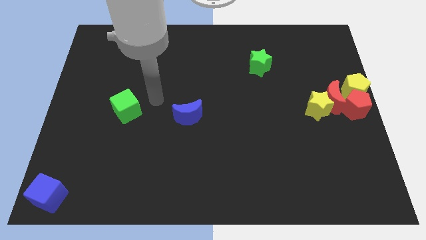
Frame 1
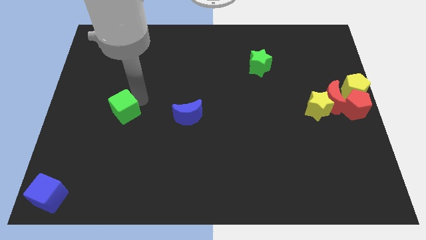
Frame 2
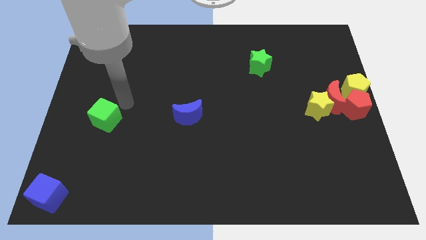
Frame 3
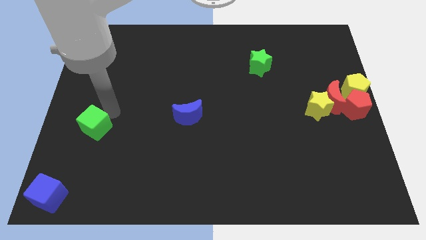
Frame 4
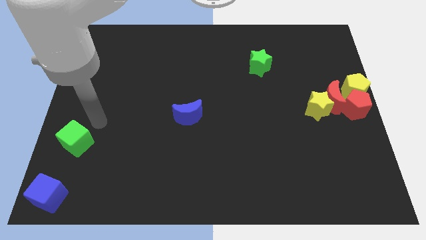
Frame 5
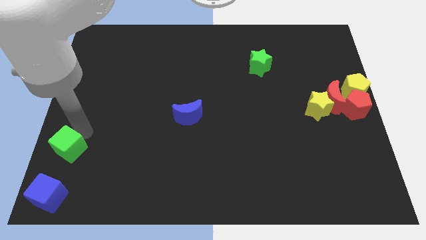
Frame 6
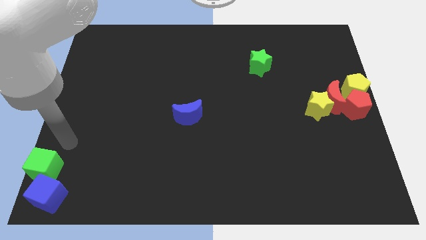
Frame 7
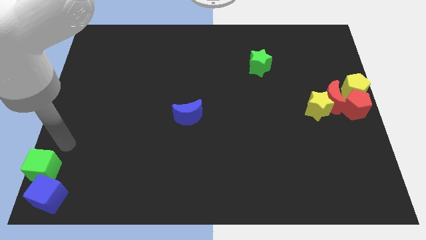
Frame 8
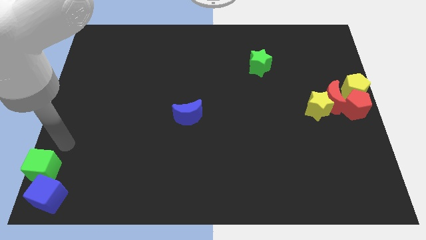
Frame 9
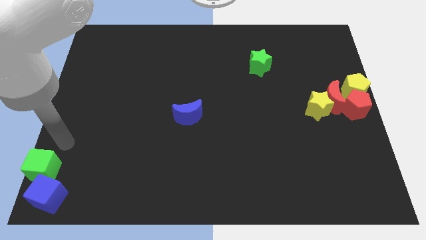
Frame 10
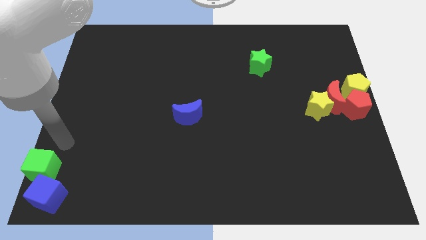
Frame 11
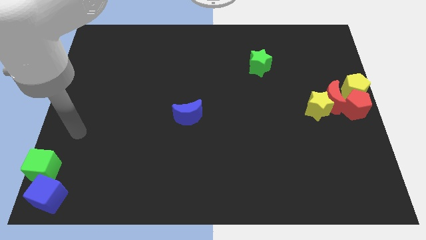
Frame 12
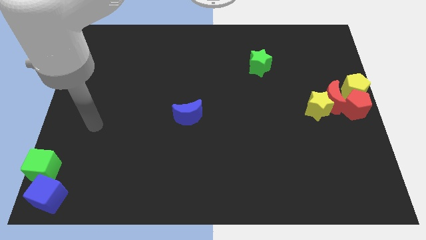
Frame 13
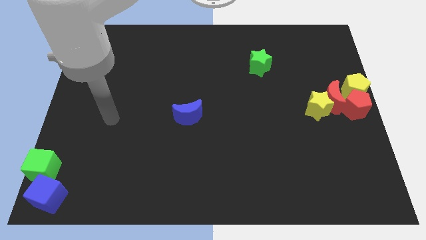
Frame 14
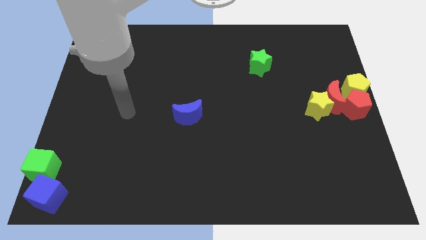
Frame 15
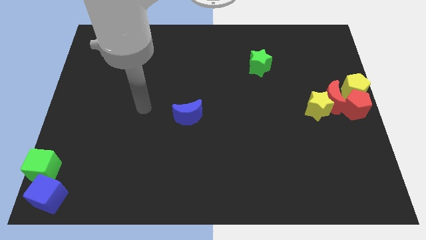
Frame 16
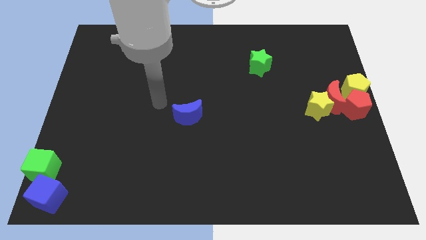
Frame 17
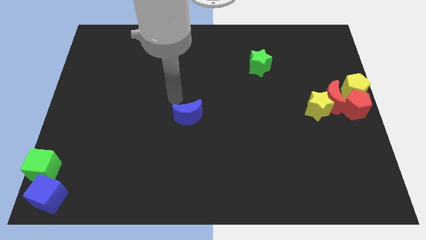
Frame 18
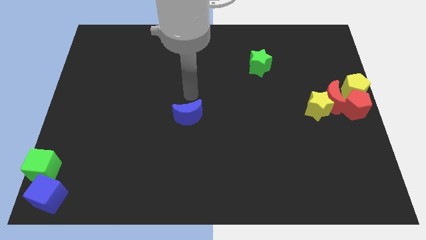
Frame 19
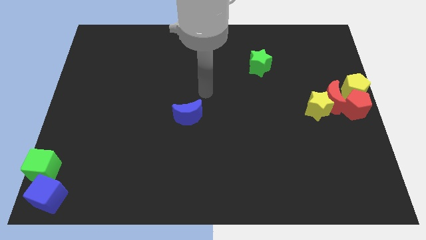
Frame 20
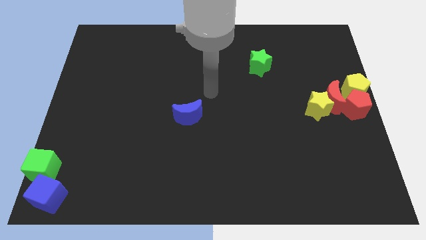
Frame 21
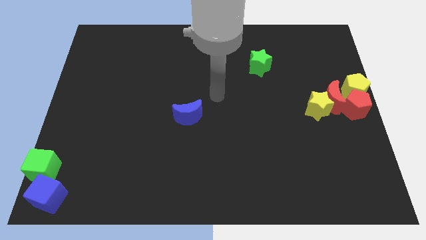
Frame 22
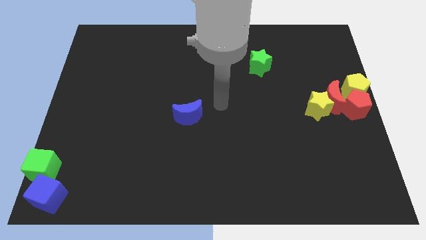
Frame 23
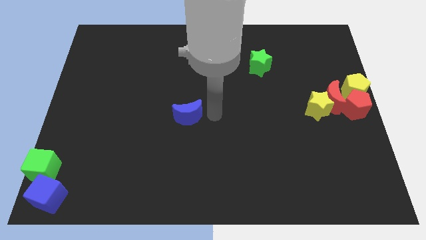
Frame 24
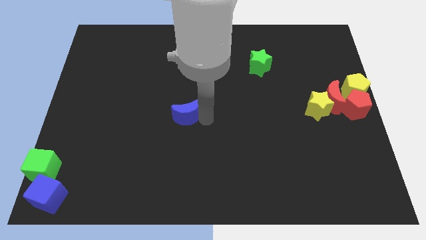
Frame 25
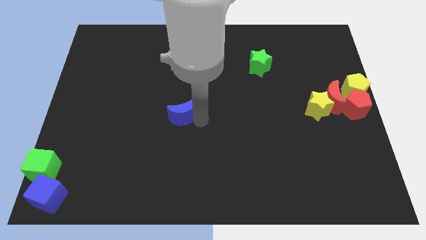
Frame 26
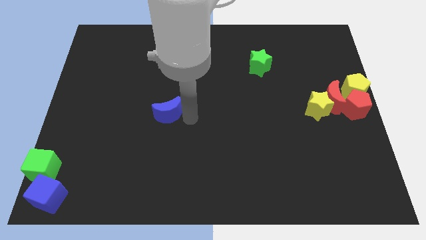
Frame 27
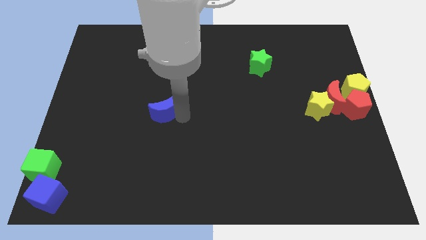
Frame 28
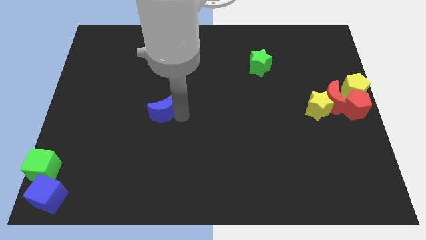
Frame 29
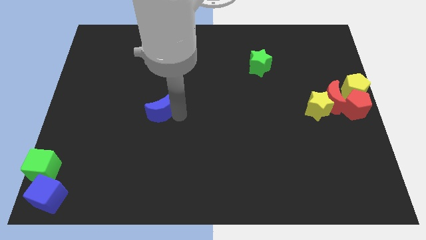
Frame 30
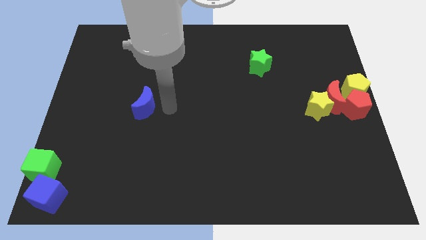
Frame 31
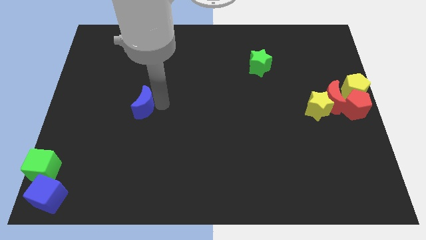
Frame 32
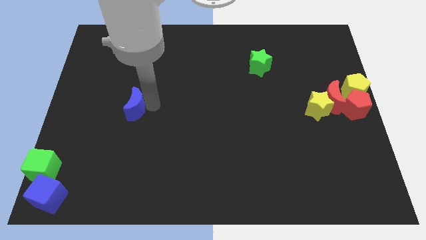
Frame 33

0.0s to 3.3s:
move the green cube into the blue cube

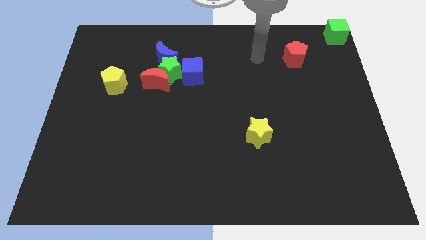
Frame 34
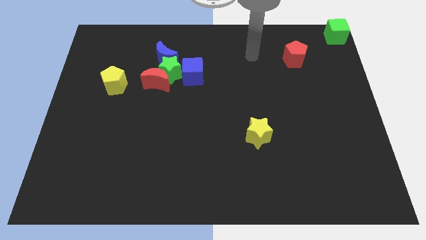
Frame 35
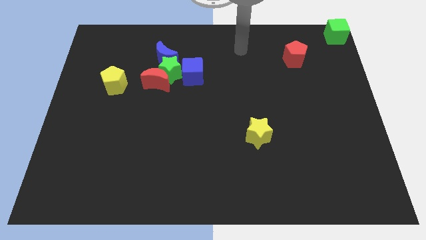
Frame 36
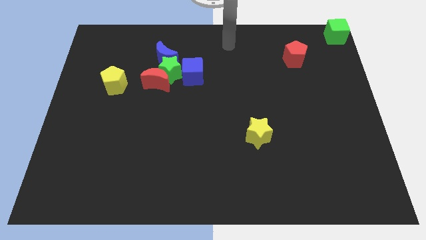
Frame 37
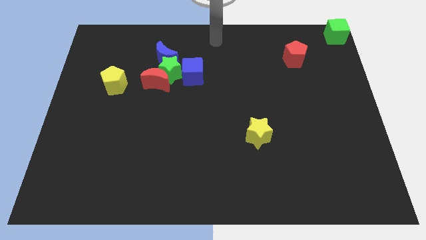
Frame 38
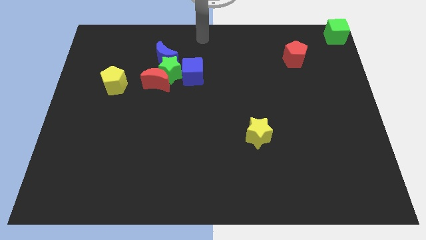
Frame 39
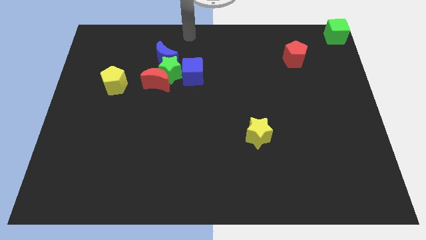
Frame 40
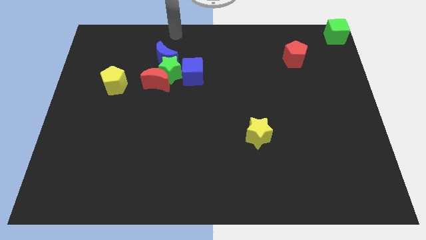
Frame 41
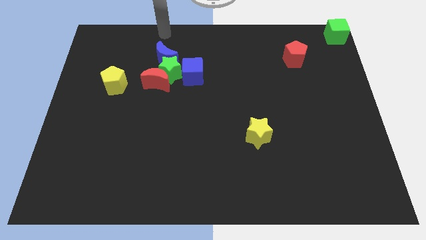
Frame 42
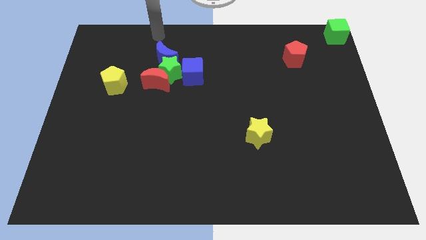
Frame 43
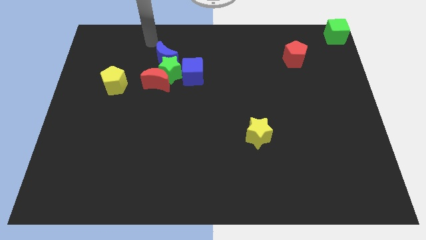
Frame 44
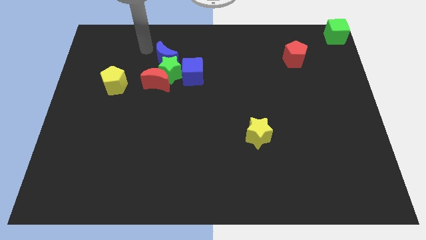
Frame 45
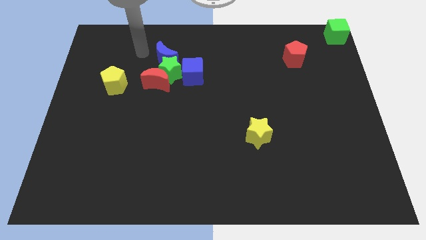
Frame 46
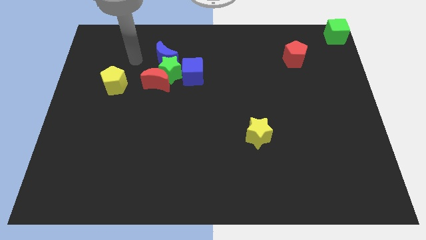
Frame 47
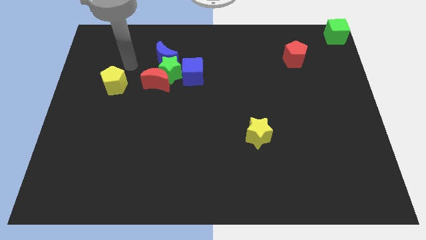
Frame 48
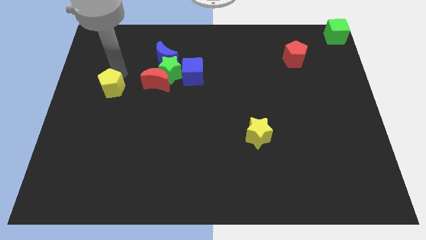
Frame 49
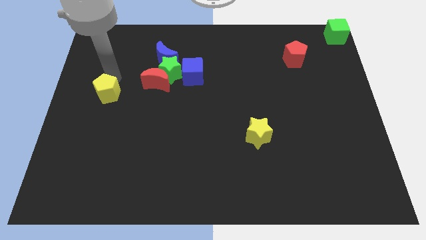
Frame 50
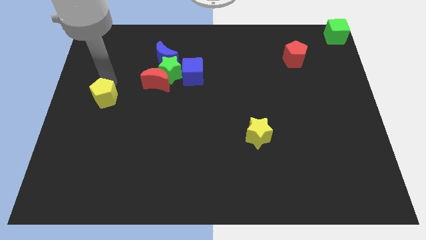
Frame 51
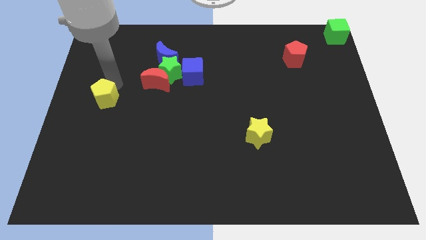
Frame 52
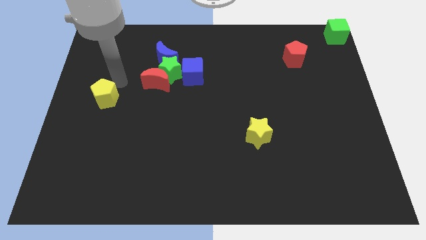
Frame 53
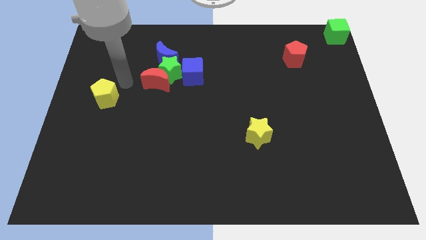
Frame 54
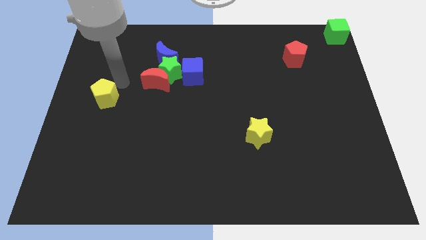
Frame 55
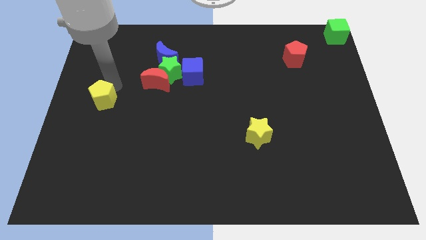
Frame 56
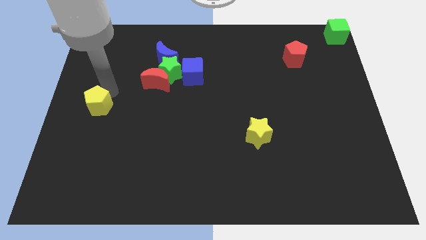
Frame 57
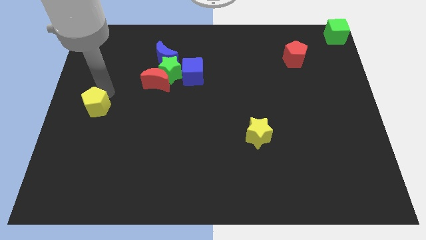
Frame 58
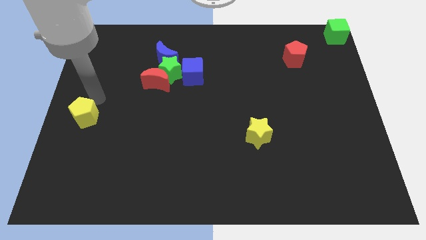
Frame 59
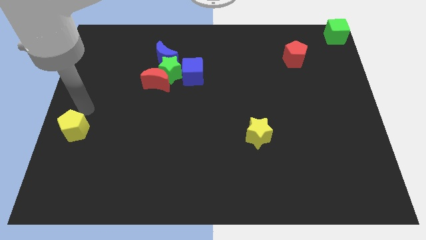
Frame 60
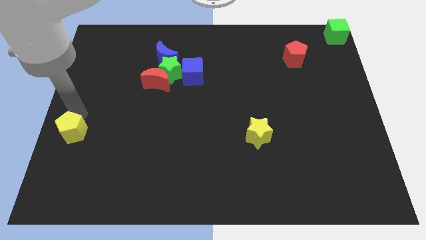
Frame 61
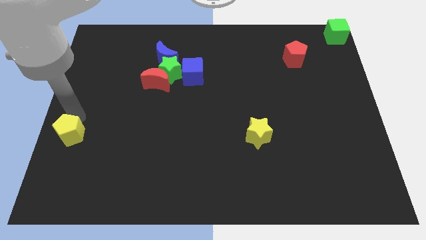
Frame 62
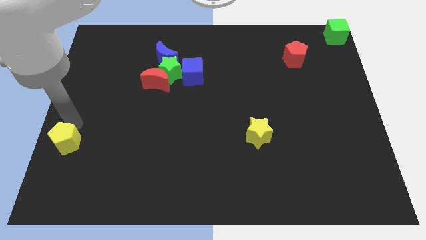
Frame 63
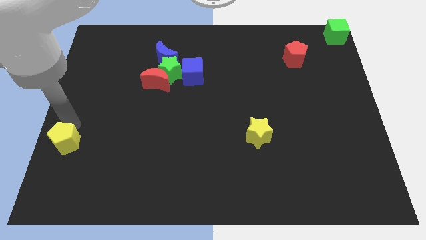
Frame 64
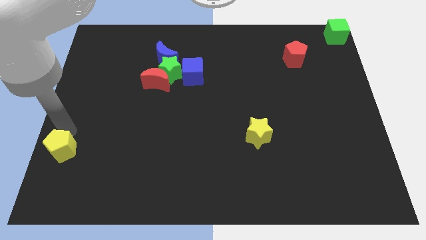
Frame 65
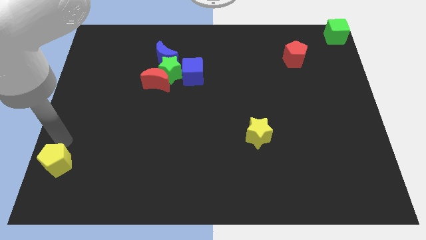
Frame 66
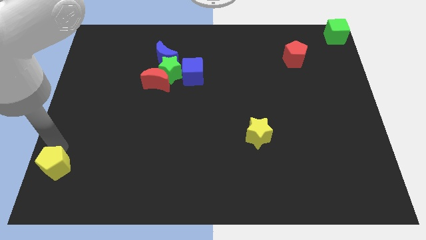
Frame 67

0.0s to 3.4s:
push the yellow pentagon towards the bottom left side of the board

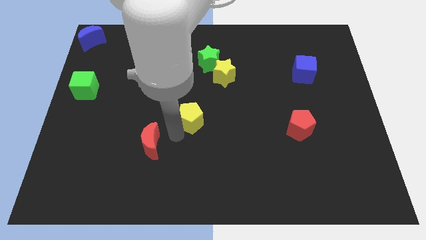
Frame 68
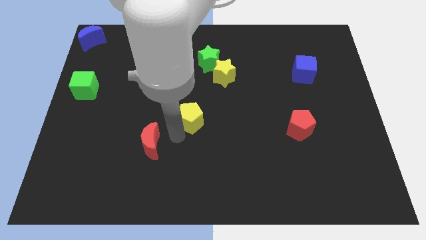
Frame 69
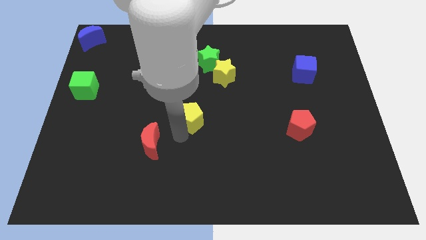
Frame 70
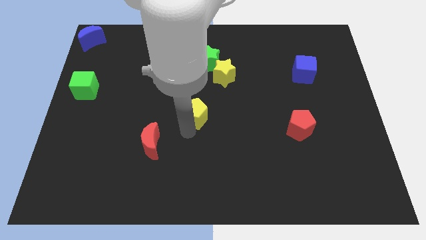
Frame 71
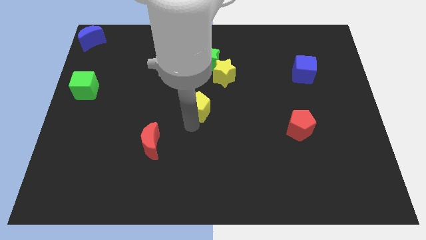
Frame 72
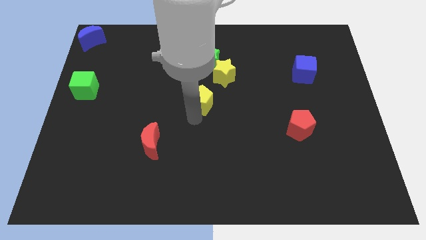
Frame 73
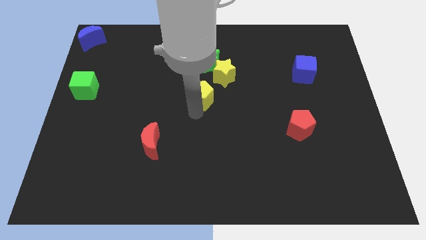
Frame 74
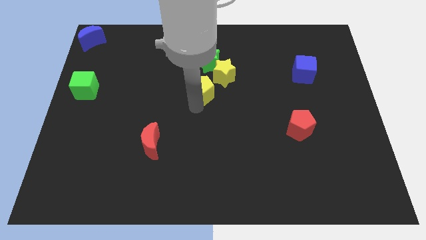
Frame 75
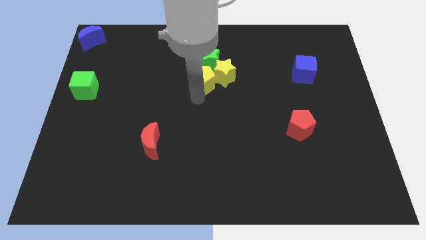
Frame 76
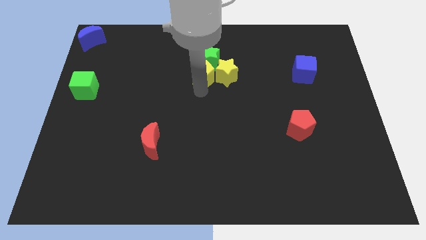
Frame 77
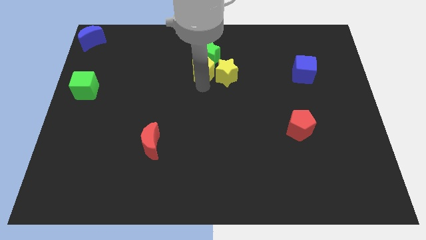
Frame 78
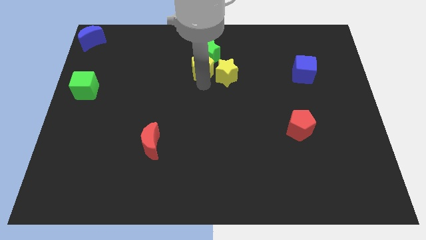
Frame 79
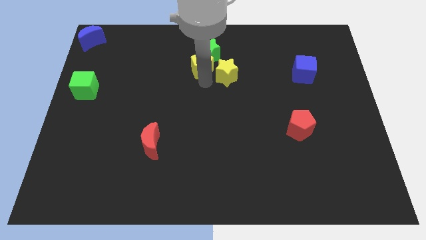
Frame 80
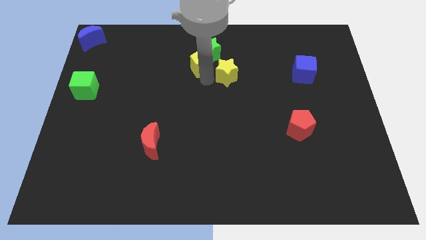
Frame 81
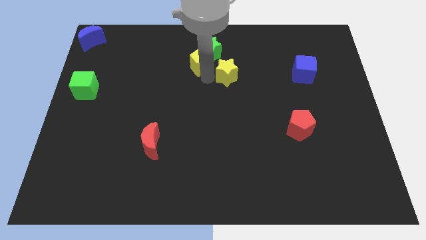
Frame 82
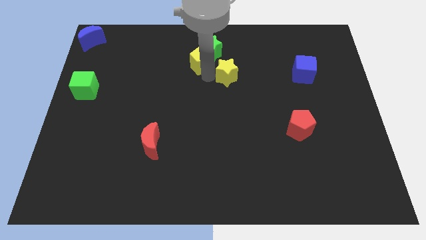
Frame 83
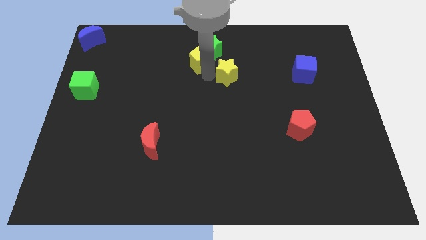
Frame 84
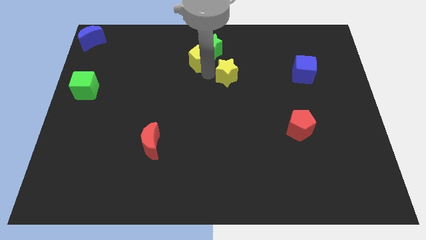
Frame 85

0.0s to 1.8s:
push the yellow pentagon into the green star

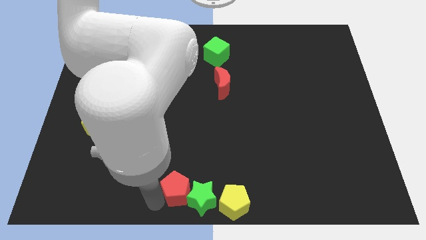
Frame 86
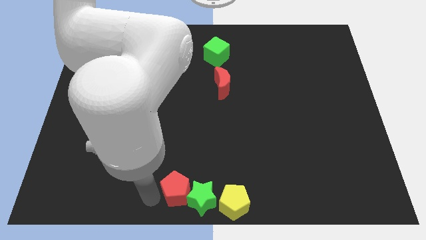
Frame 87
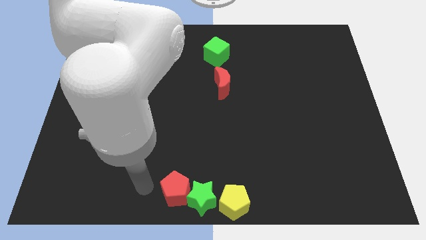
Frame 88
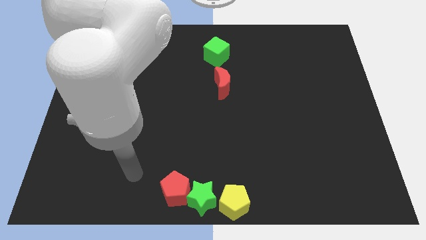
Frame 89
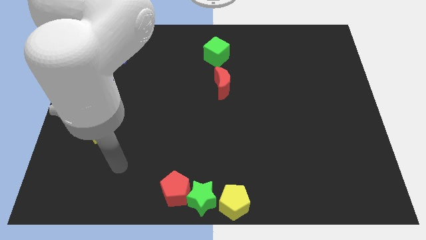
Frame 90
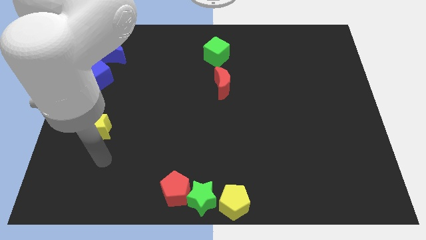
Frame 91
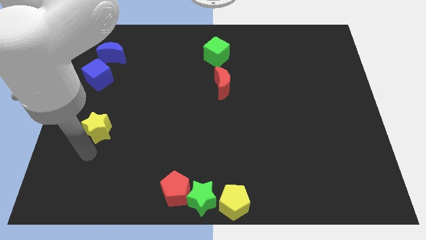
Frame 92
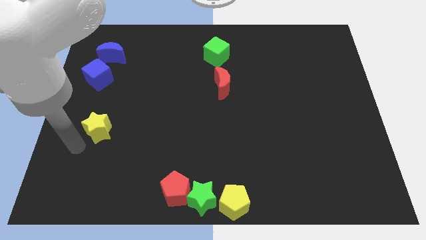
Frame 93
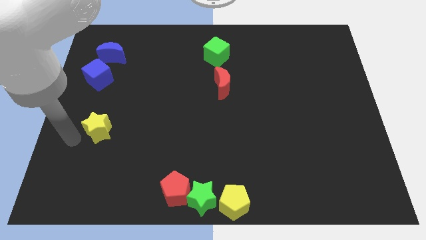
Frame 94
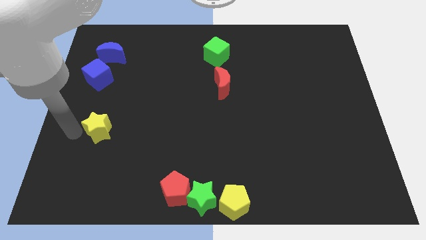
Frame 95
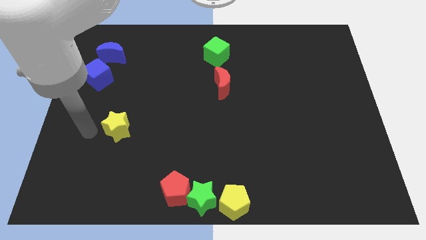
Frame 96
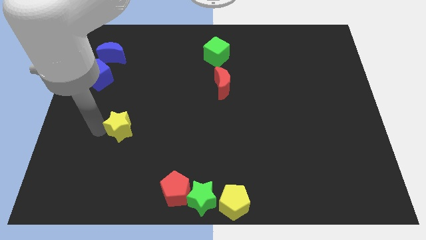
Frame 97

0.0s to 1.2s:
move your arm away from red pentagon
